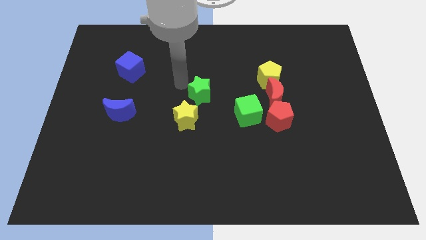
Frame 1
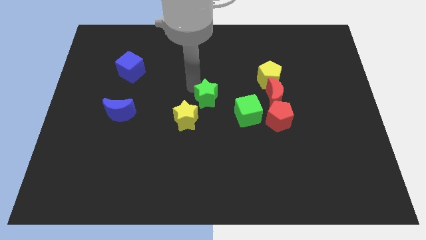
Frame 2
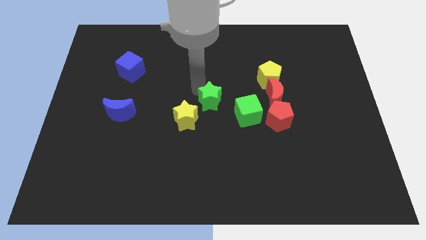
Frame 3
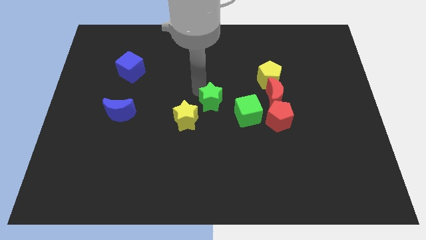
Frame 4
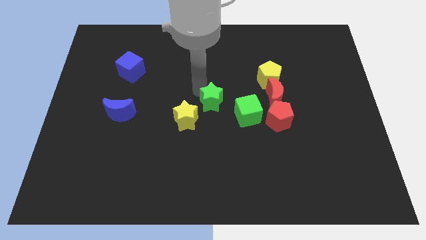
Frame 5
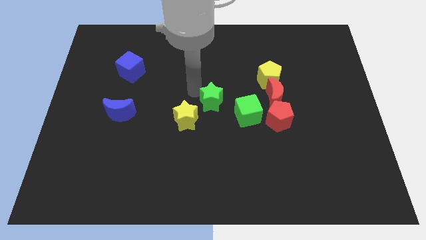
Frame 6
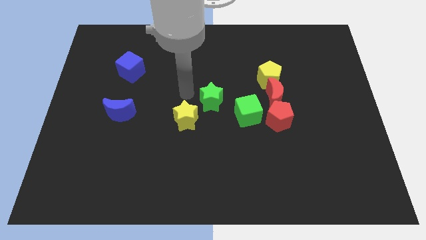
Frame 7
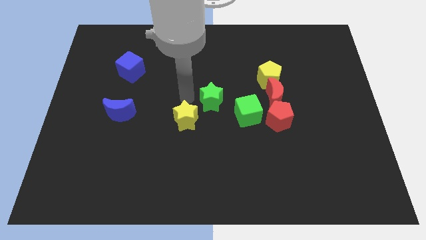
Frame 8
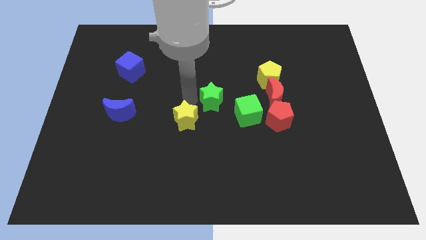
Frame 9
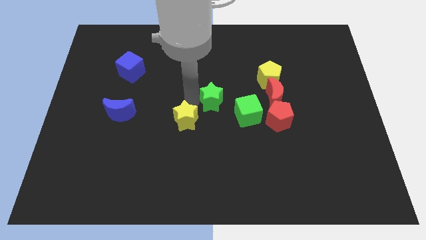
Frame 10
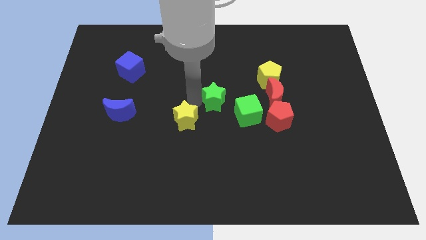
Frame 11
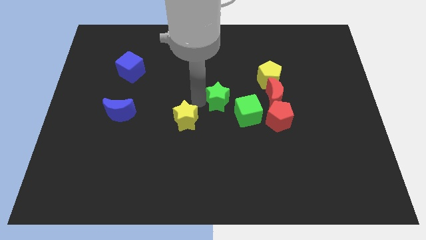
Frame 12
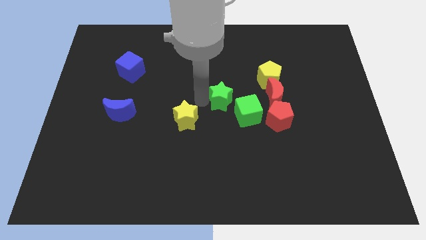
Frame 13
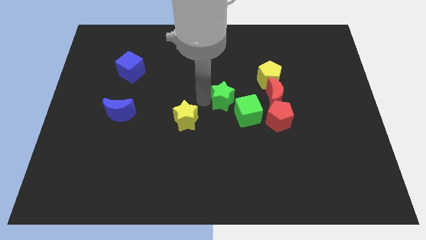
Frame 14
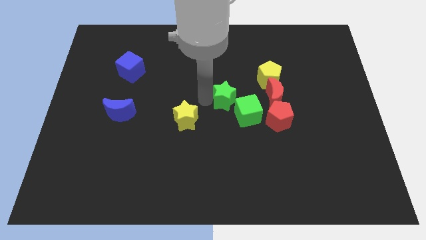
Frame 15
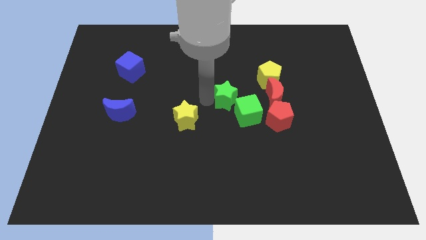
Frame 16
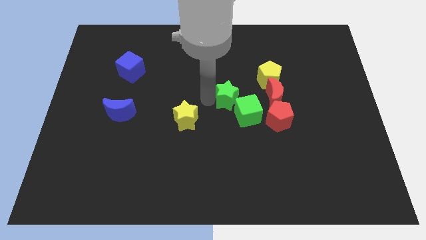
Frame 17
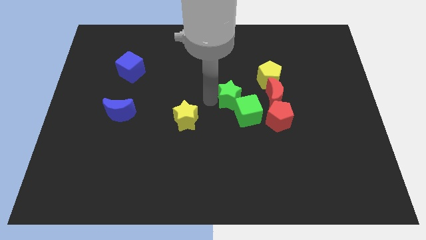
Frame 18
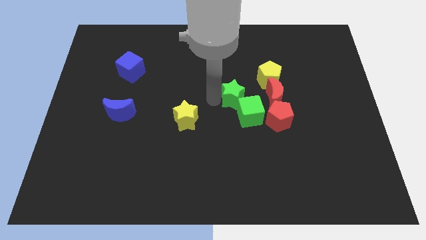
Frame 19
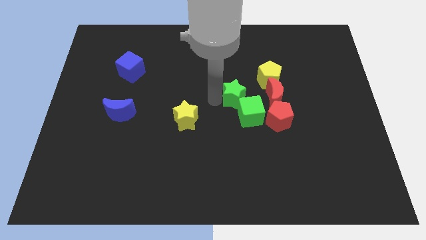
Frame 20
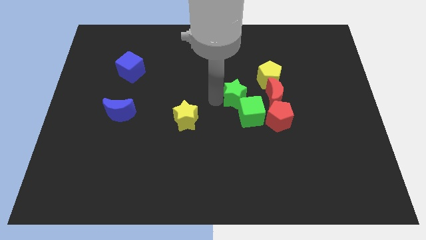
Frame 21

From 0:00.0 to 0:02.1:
add green star into green cube

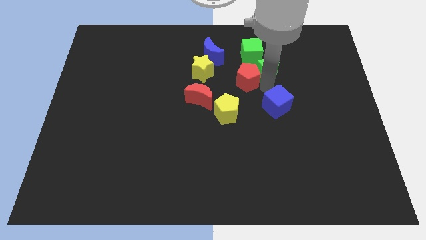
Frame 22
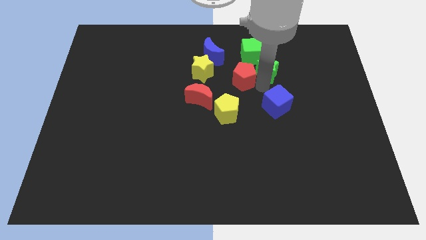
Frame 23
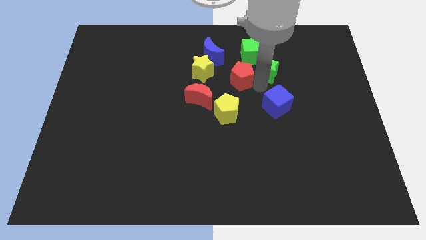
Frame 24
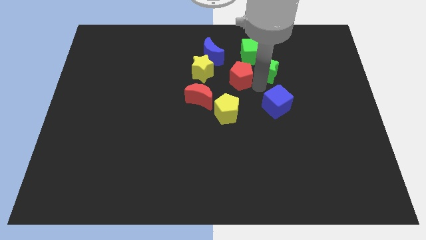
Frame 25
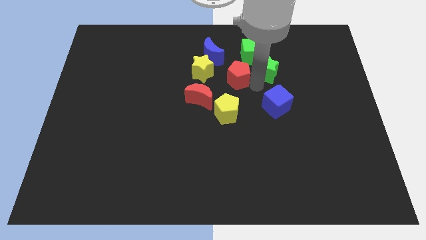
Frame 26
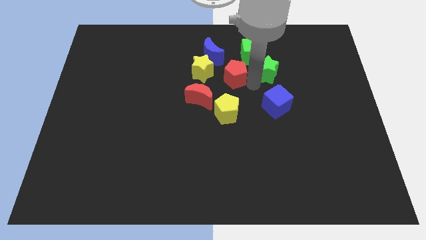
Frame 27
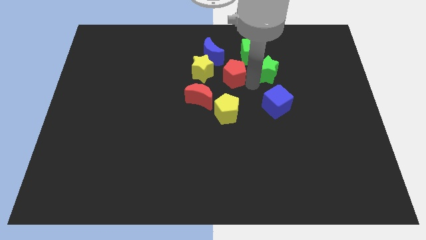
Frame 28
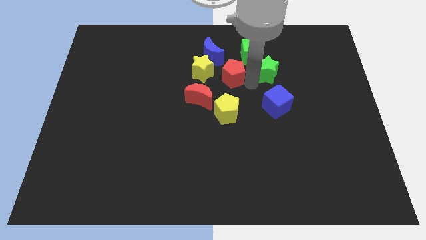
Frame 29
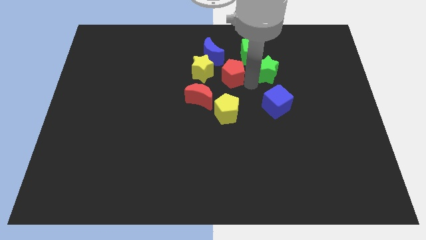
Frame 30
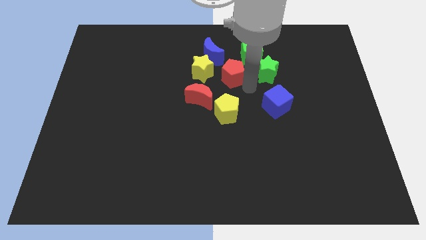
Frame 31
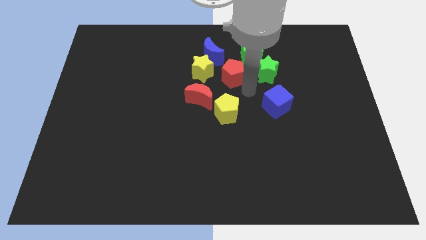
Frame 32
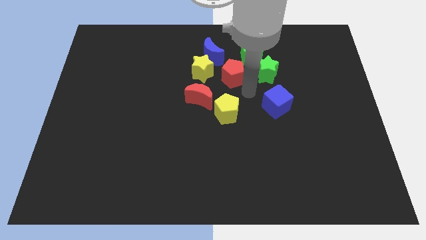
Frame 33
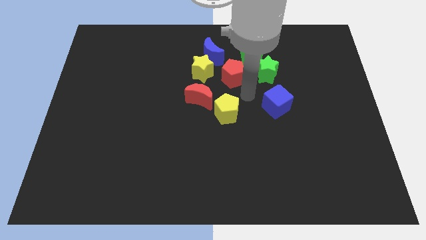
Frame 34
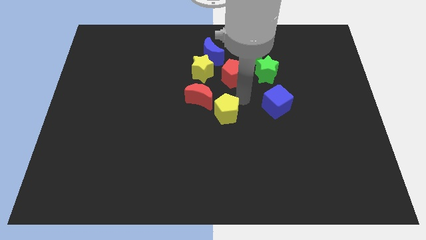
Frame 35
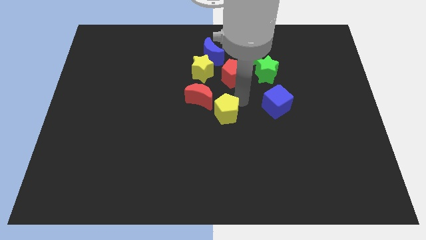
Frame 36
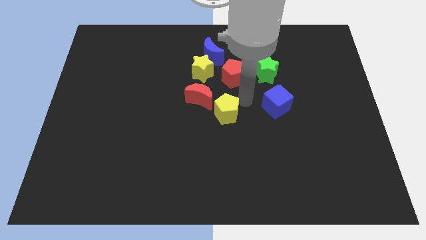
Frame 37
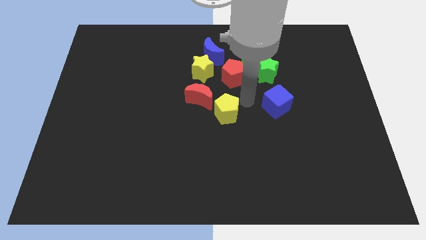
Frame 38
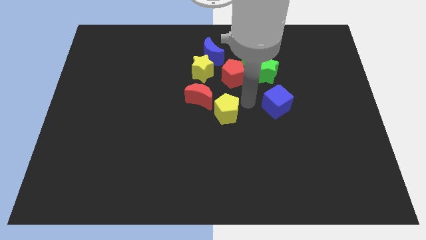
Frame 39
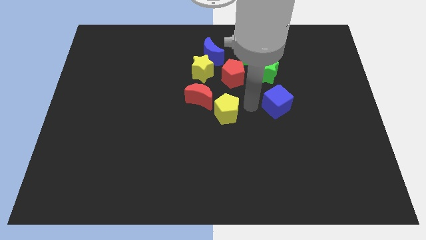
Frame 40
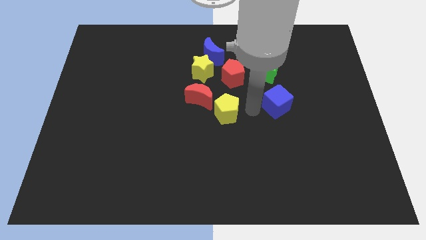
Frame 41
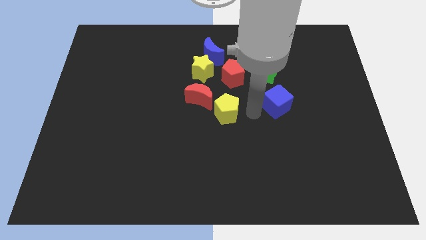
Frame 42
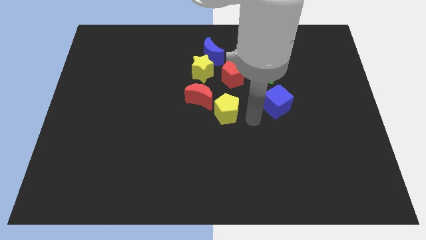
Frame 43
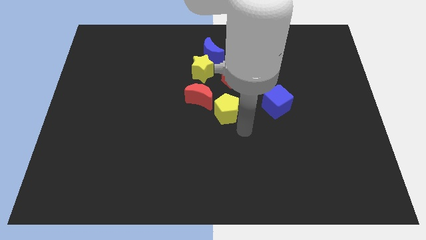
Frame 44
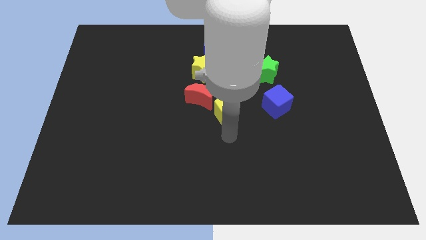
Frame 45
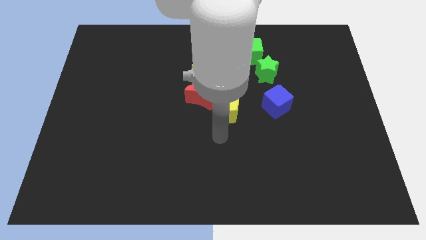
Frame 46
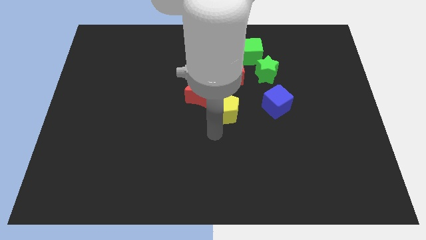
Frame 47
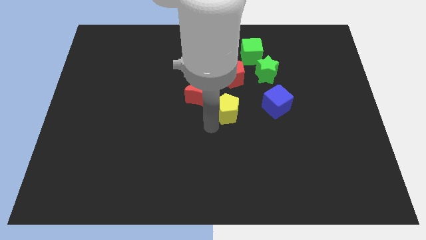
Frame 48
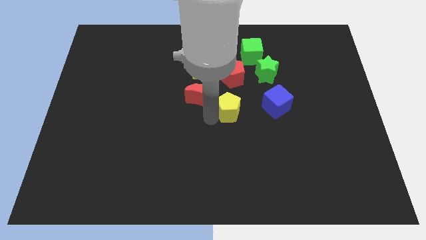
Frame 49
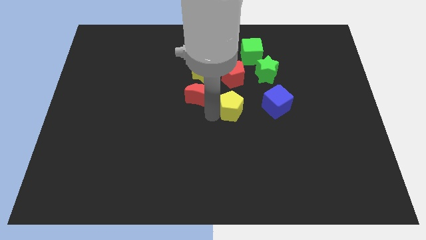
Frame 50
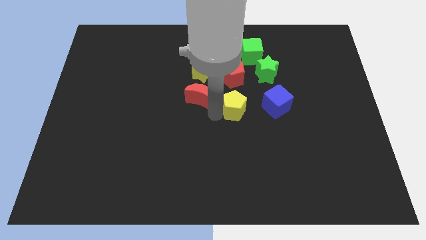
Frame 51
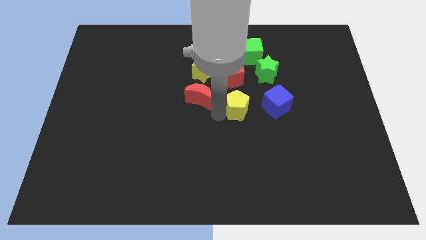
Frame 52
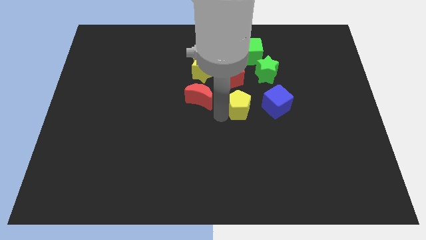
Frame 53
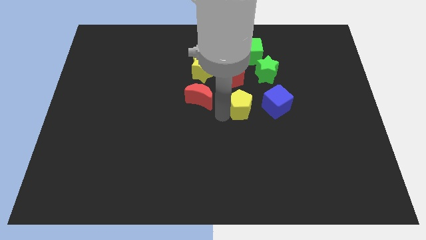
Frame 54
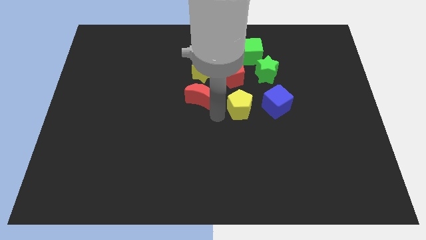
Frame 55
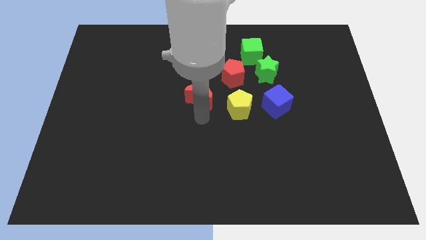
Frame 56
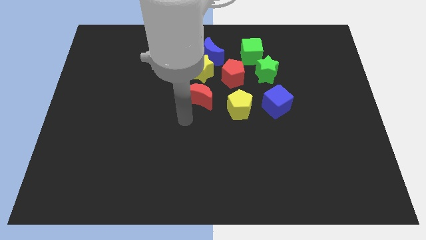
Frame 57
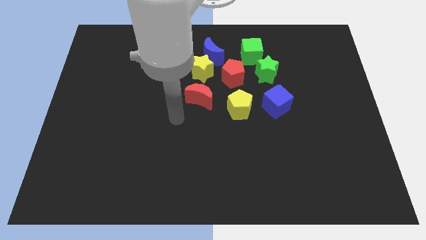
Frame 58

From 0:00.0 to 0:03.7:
push the yellow pentagon slightly upwards

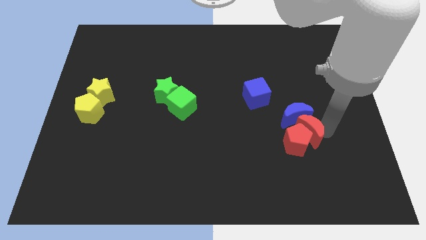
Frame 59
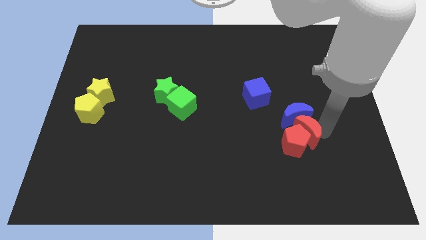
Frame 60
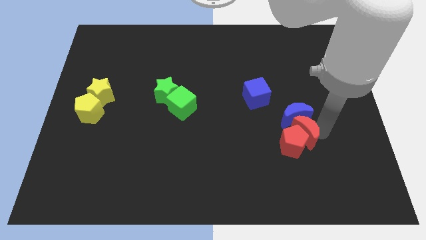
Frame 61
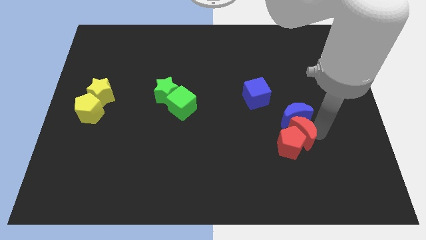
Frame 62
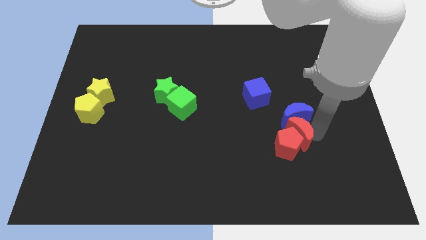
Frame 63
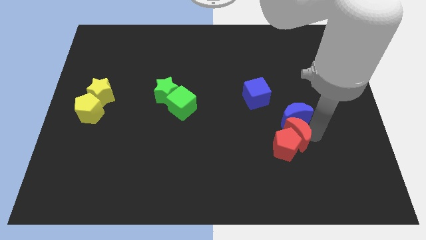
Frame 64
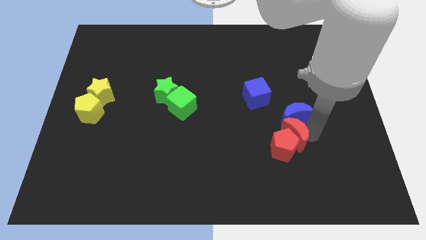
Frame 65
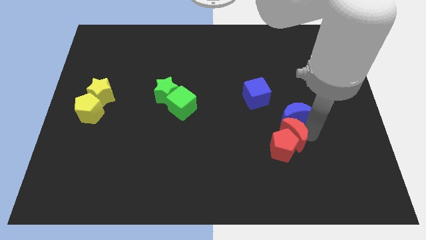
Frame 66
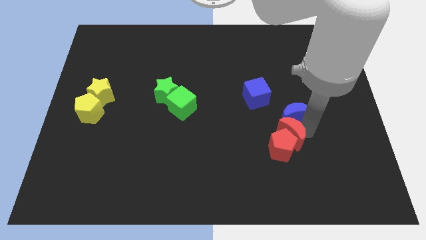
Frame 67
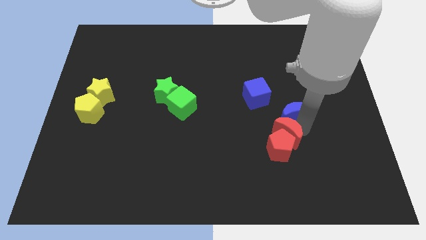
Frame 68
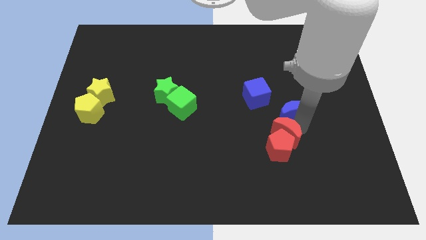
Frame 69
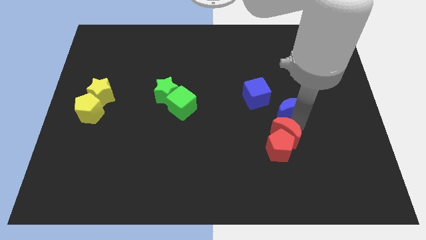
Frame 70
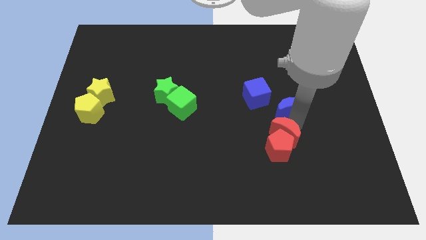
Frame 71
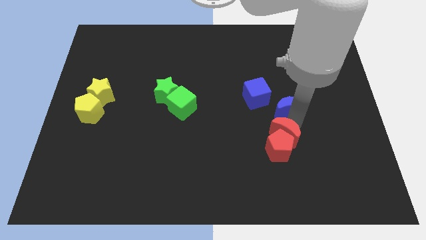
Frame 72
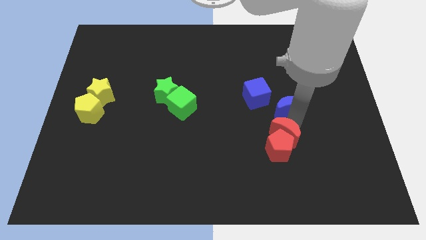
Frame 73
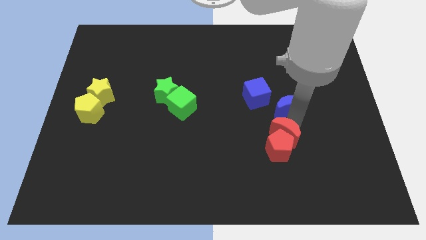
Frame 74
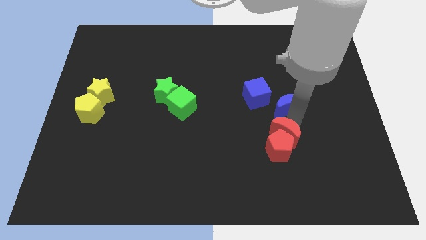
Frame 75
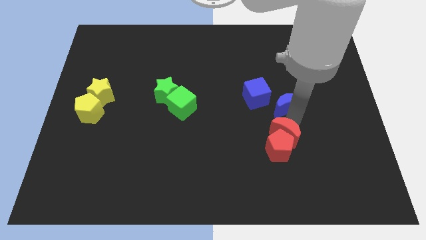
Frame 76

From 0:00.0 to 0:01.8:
place red blocks at the bottom left to blue crescent

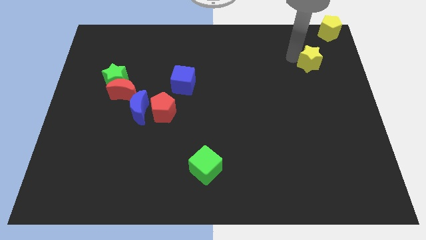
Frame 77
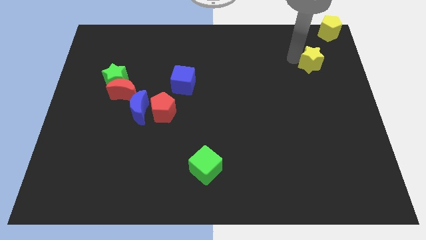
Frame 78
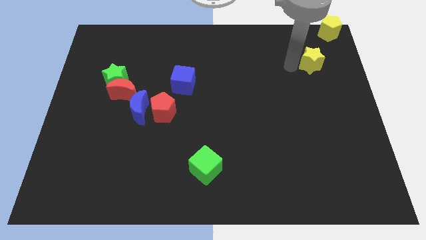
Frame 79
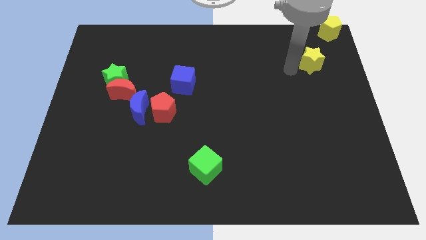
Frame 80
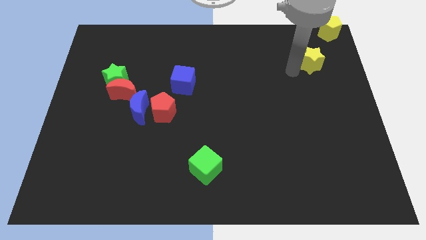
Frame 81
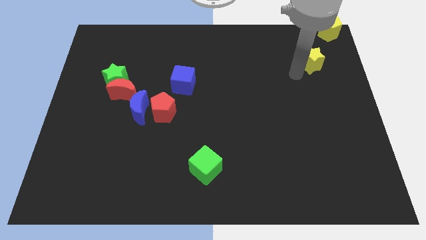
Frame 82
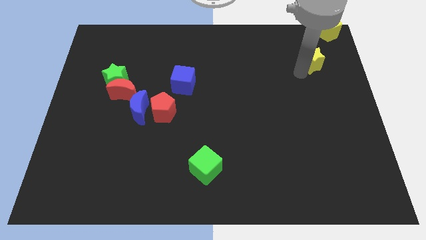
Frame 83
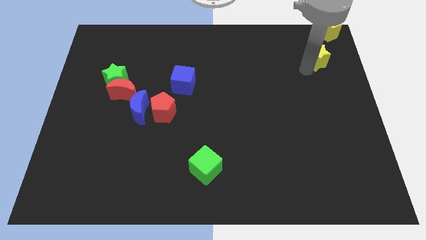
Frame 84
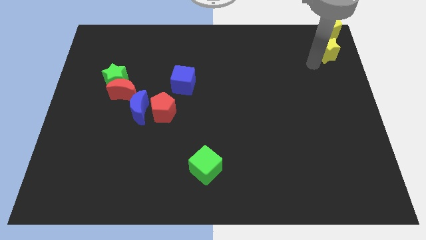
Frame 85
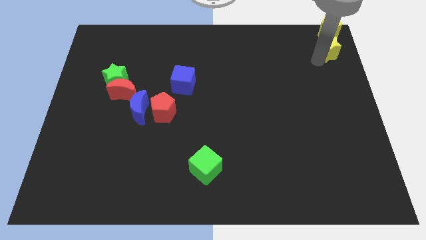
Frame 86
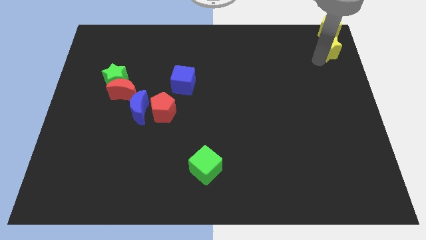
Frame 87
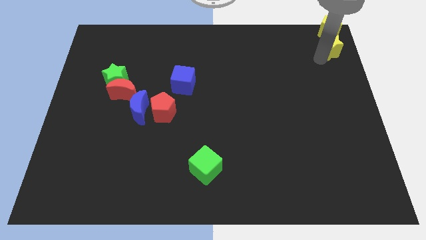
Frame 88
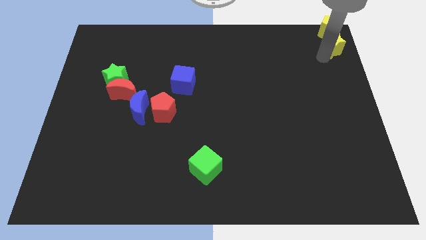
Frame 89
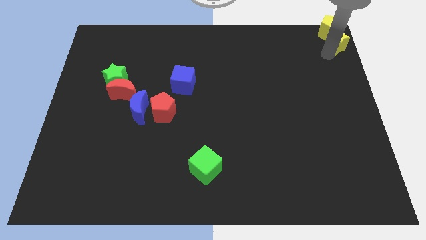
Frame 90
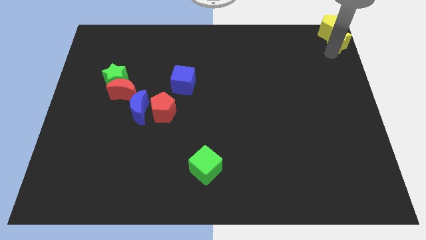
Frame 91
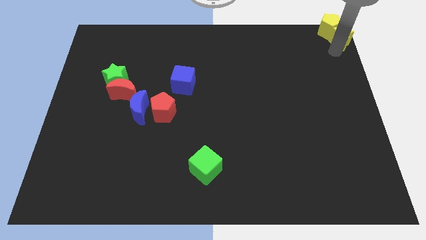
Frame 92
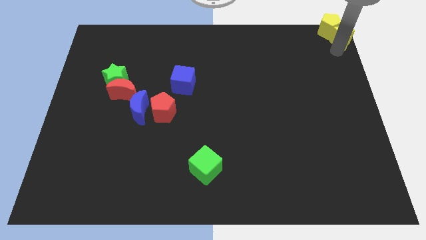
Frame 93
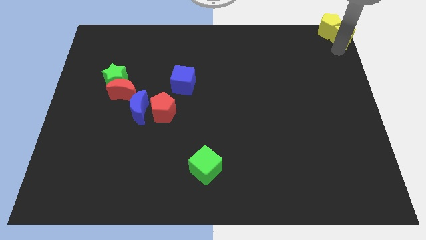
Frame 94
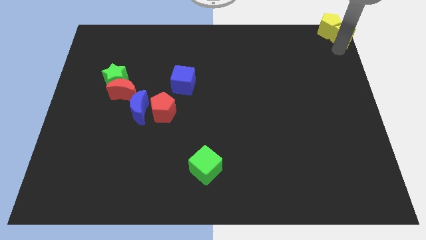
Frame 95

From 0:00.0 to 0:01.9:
move the yellow star into the yellow pentagon
